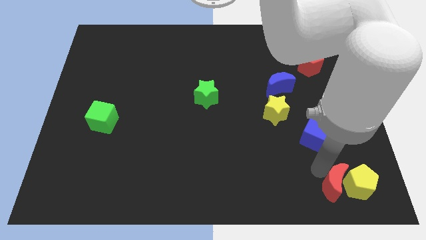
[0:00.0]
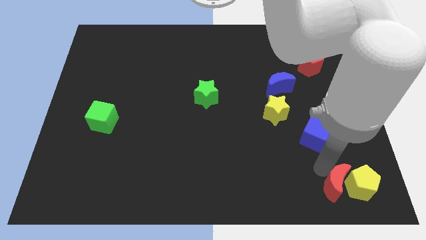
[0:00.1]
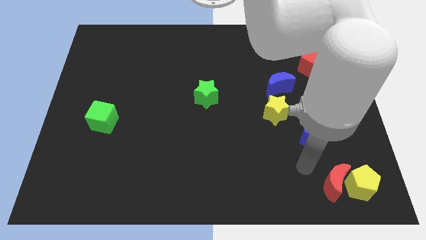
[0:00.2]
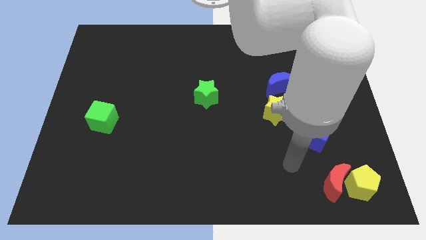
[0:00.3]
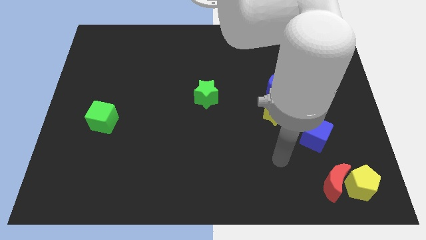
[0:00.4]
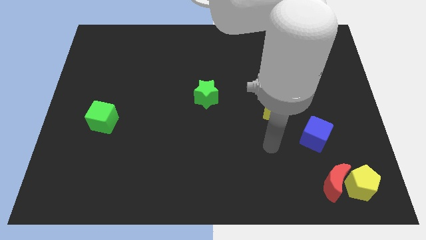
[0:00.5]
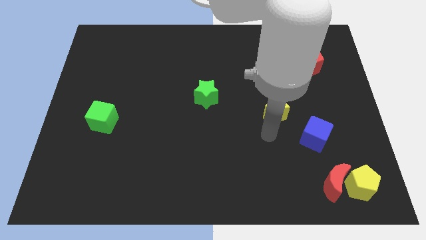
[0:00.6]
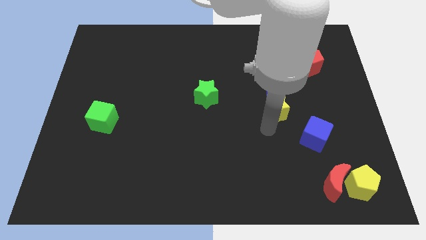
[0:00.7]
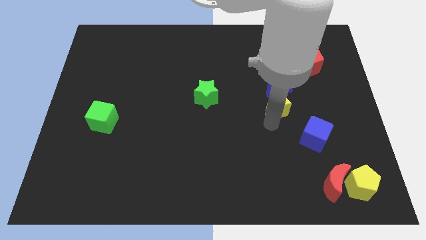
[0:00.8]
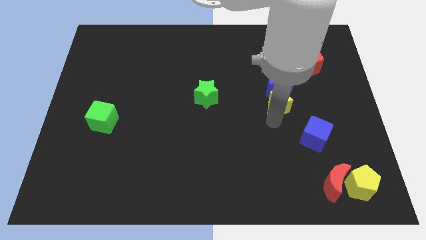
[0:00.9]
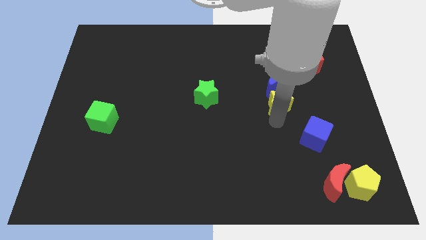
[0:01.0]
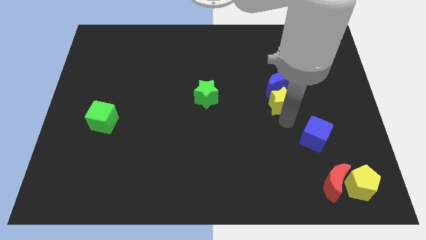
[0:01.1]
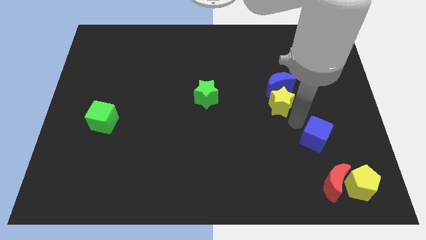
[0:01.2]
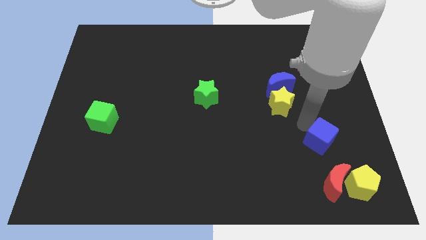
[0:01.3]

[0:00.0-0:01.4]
slide the yellow star close to the blue moon

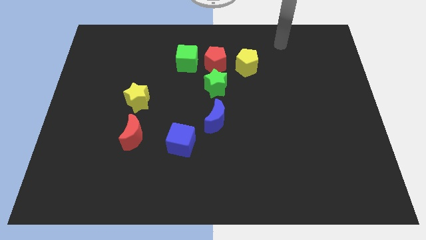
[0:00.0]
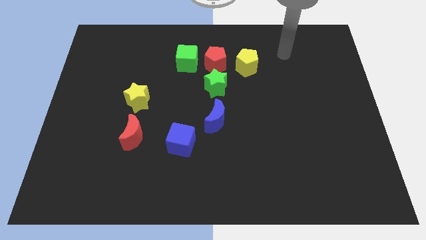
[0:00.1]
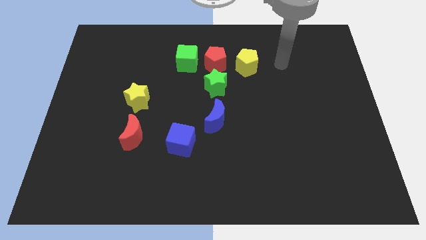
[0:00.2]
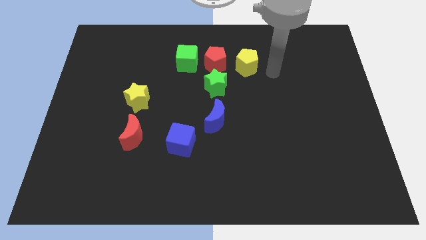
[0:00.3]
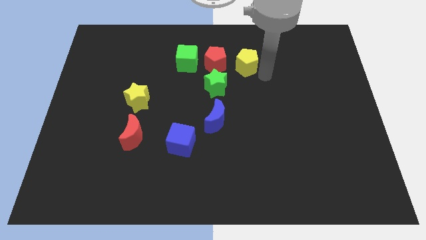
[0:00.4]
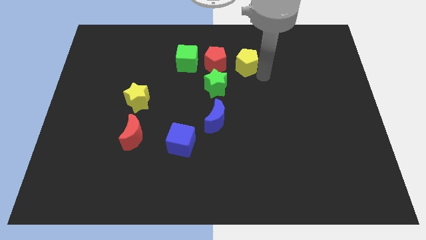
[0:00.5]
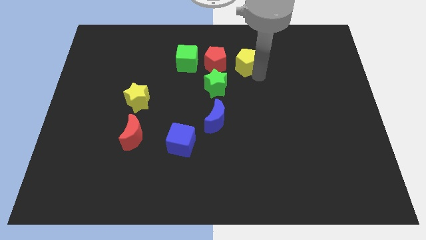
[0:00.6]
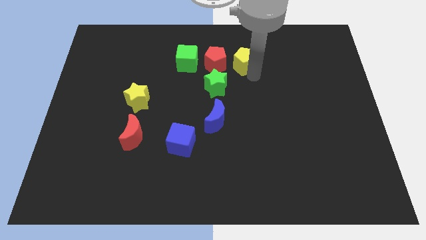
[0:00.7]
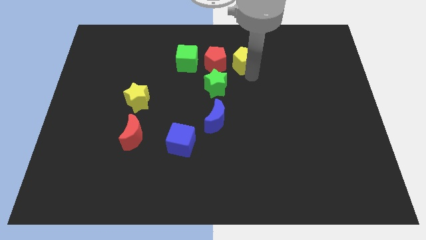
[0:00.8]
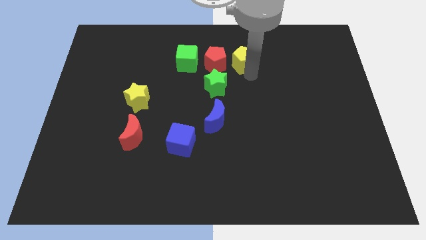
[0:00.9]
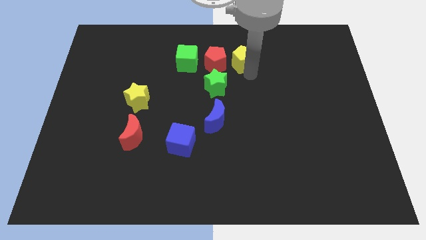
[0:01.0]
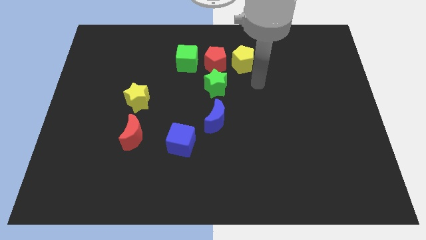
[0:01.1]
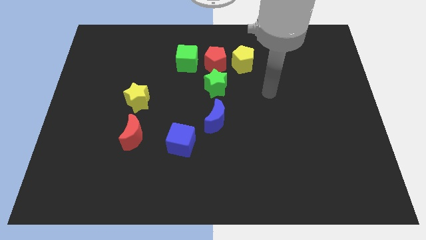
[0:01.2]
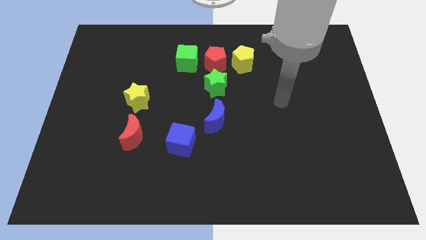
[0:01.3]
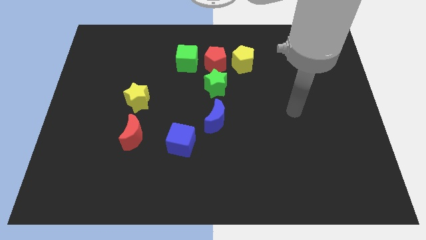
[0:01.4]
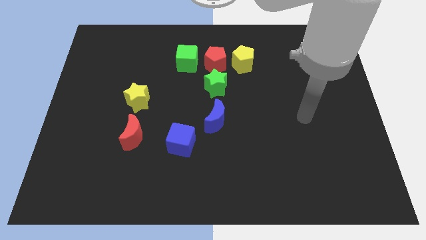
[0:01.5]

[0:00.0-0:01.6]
slightly push yellow pentagon close to red pentagon

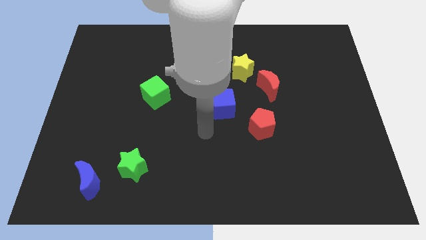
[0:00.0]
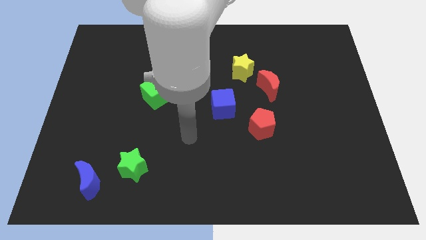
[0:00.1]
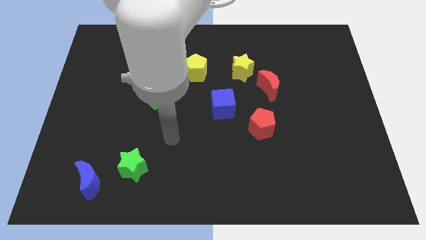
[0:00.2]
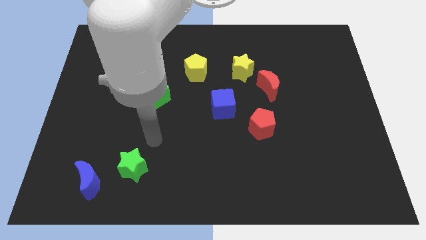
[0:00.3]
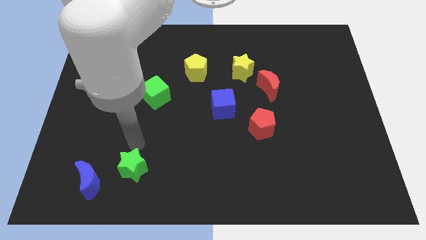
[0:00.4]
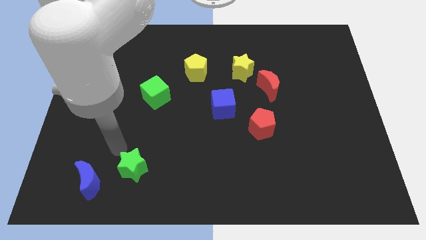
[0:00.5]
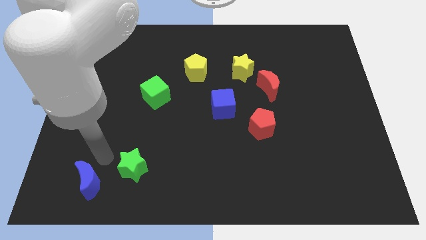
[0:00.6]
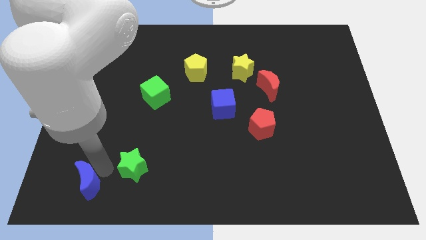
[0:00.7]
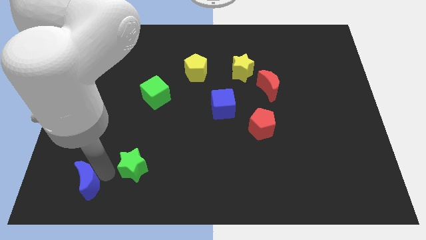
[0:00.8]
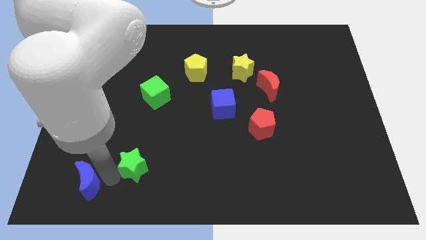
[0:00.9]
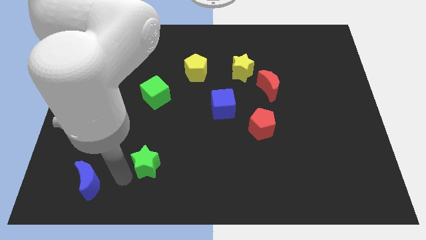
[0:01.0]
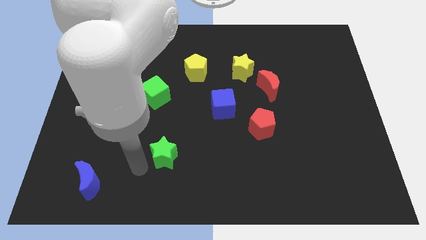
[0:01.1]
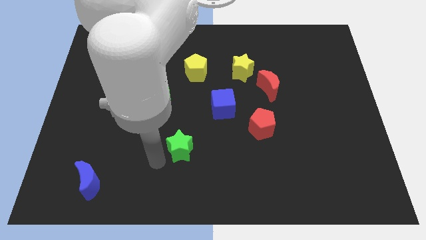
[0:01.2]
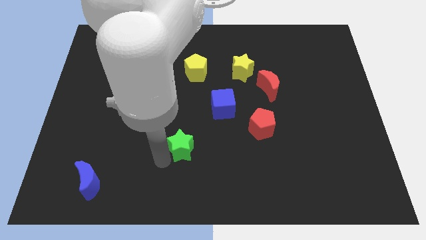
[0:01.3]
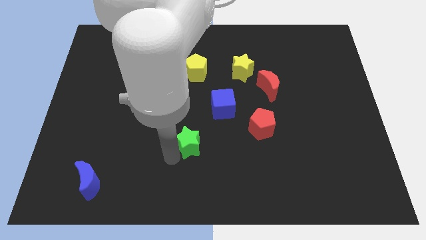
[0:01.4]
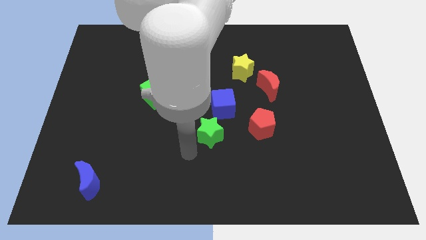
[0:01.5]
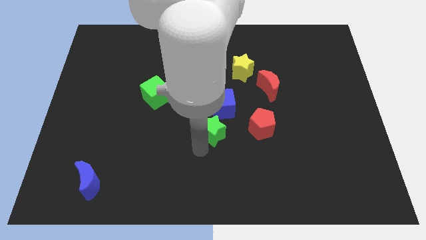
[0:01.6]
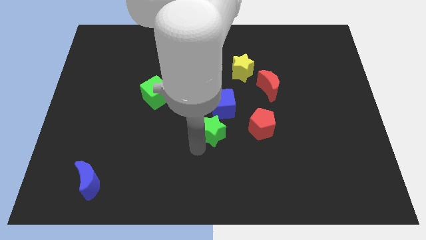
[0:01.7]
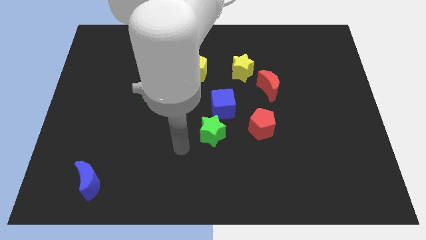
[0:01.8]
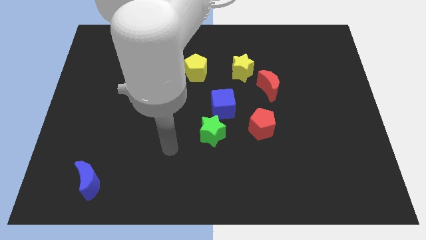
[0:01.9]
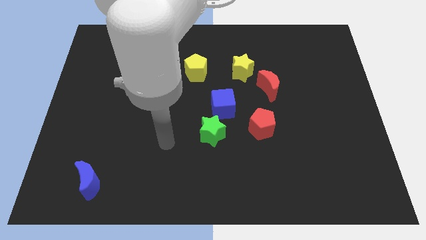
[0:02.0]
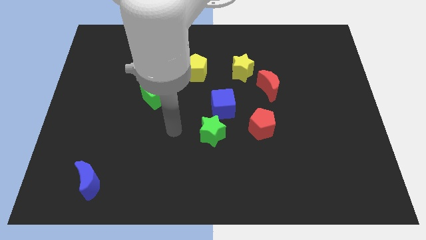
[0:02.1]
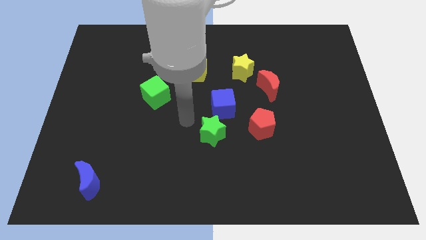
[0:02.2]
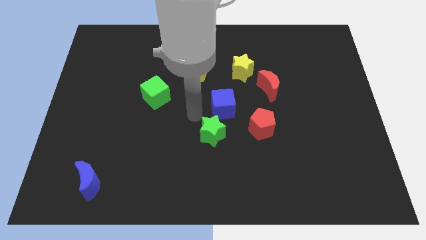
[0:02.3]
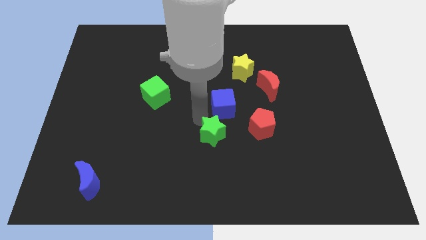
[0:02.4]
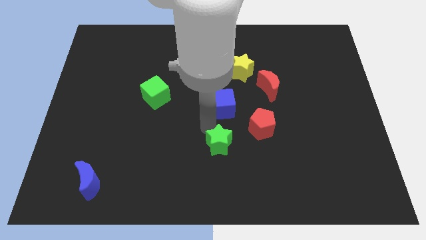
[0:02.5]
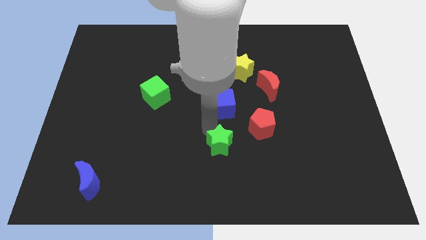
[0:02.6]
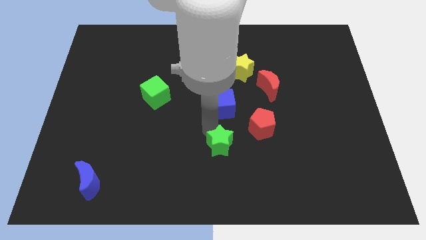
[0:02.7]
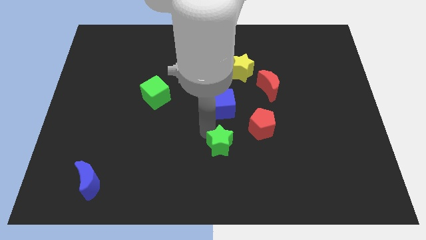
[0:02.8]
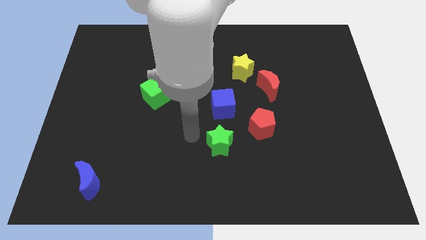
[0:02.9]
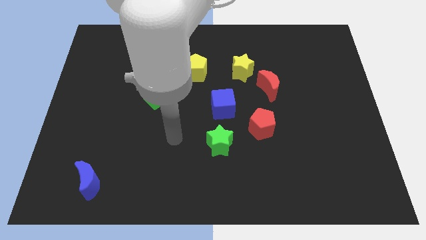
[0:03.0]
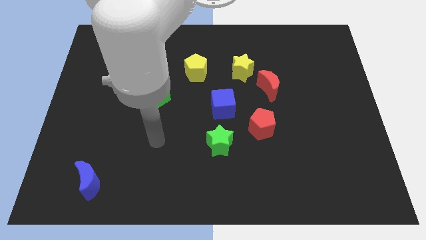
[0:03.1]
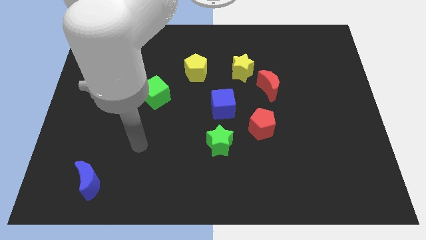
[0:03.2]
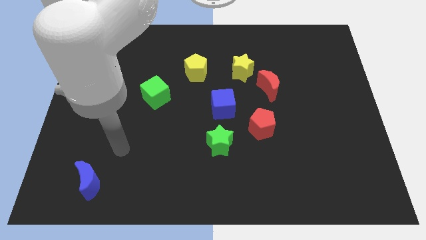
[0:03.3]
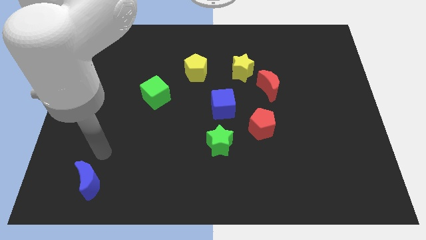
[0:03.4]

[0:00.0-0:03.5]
move the green star to the bottom of the blue cube

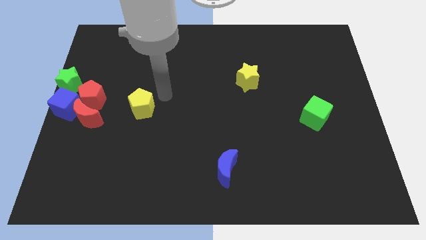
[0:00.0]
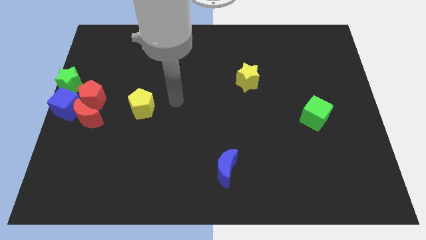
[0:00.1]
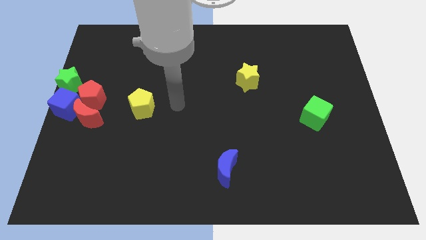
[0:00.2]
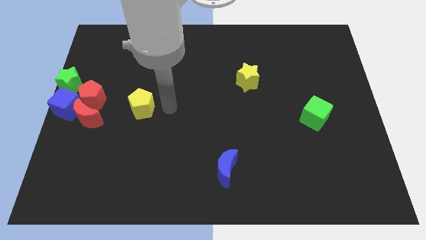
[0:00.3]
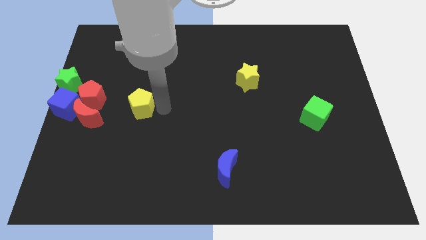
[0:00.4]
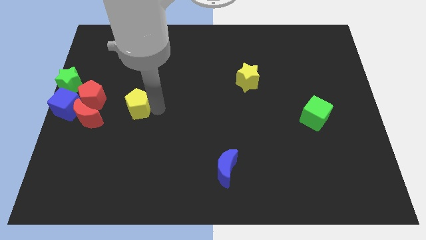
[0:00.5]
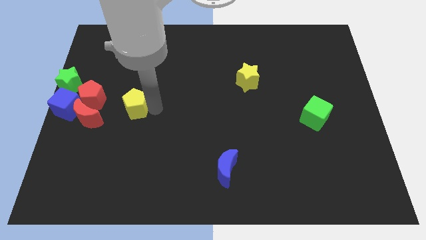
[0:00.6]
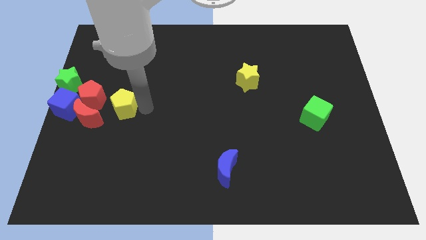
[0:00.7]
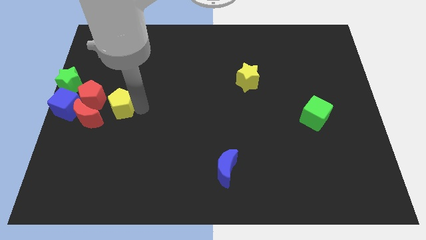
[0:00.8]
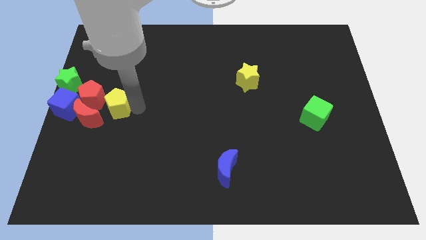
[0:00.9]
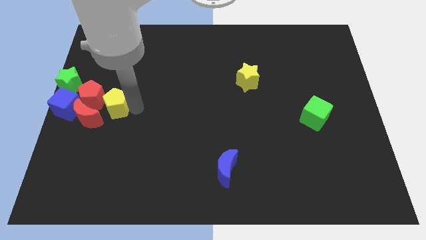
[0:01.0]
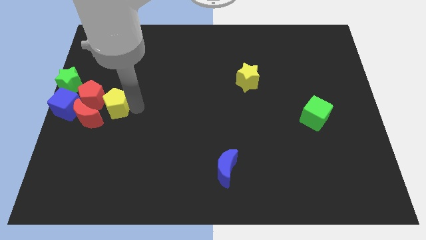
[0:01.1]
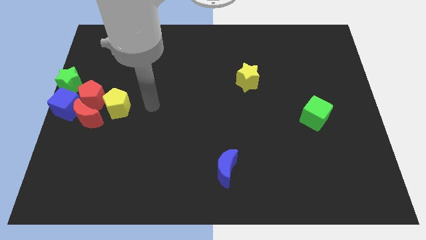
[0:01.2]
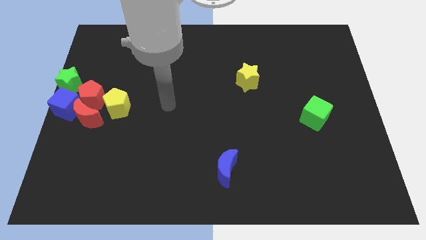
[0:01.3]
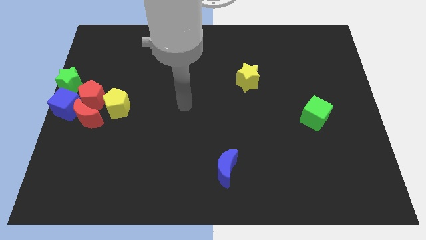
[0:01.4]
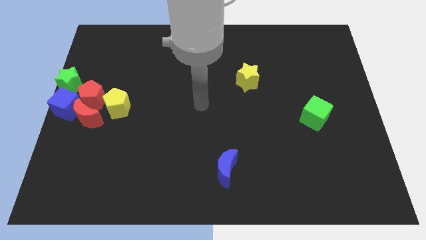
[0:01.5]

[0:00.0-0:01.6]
move yellow pentagon close to the red pentagon

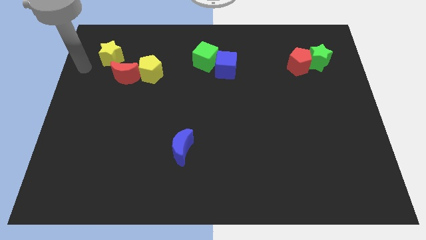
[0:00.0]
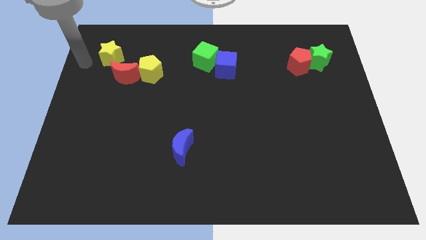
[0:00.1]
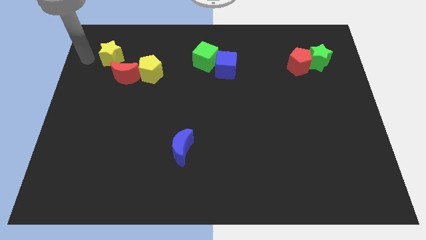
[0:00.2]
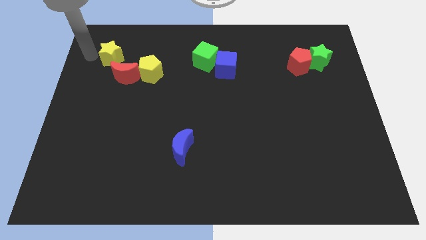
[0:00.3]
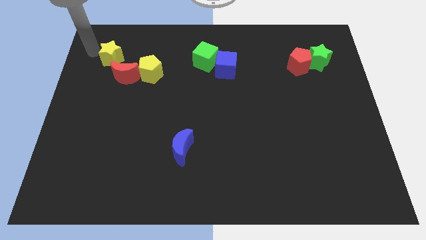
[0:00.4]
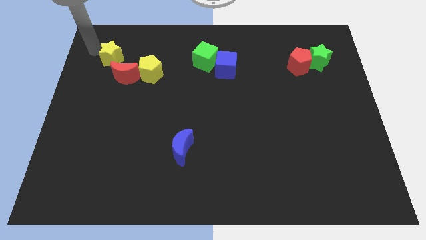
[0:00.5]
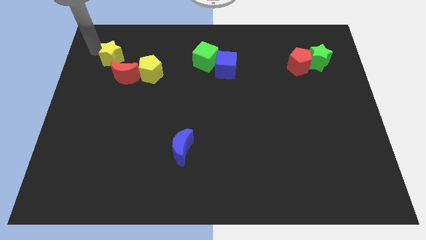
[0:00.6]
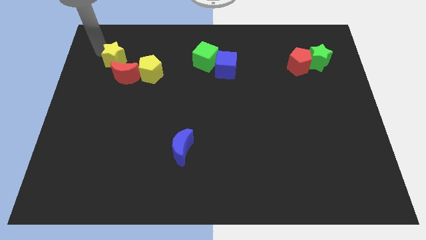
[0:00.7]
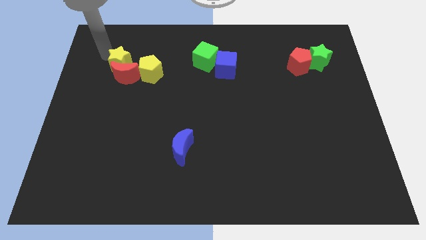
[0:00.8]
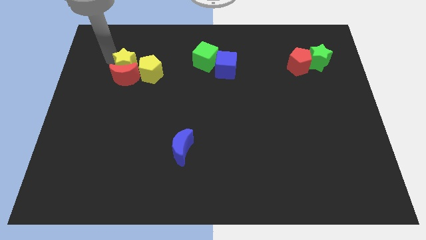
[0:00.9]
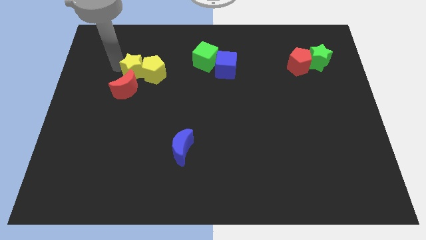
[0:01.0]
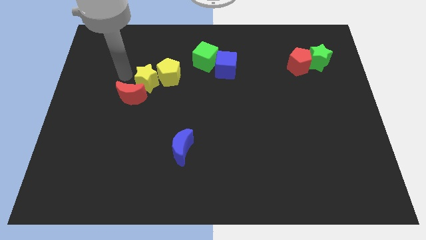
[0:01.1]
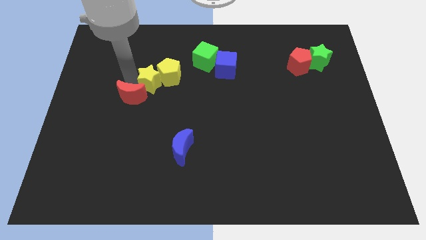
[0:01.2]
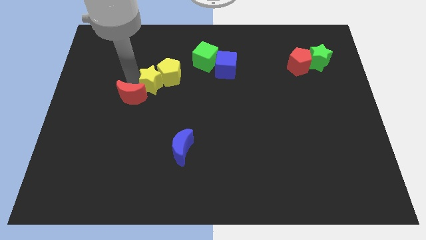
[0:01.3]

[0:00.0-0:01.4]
push yellow star in to red moon
